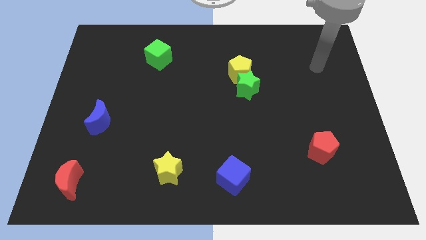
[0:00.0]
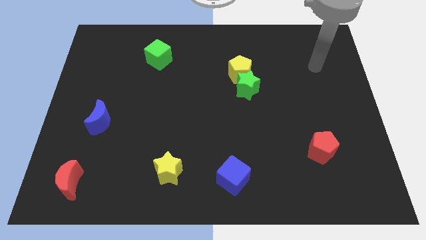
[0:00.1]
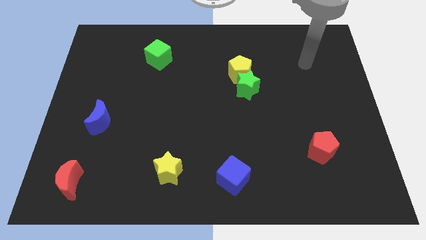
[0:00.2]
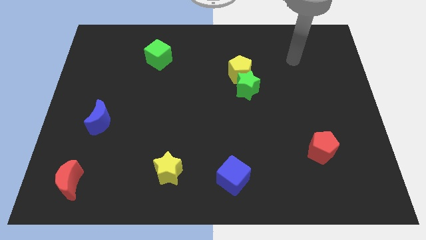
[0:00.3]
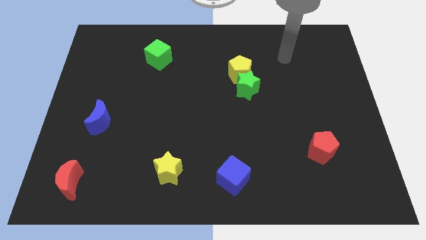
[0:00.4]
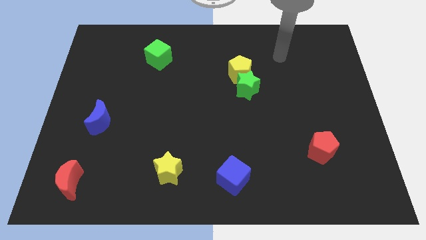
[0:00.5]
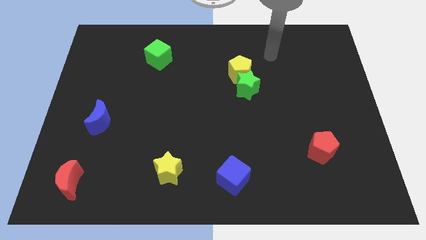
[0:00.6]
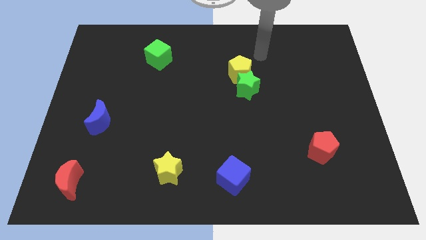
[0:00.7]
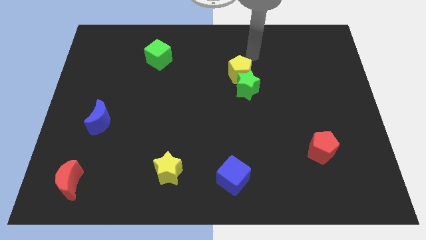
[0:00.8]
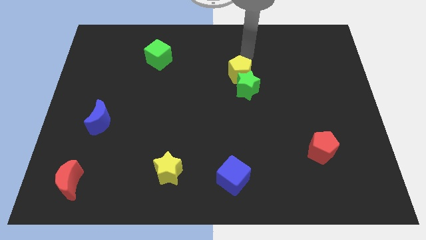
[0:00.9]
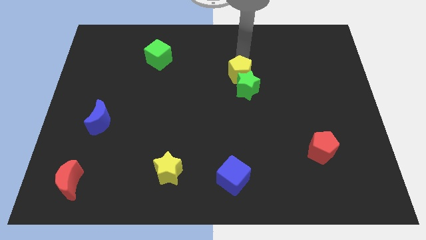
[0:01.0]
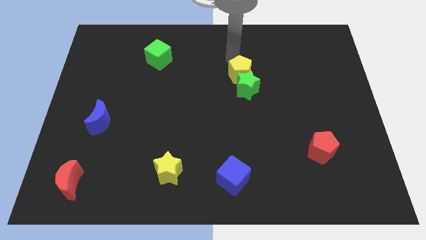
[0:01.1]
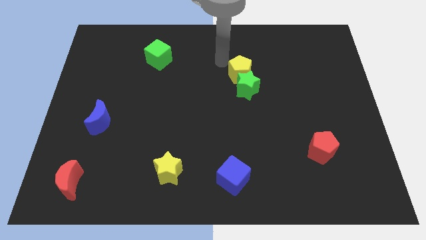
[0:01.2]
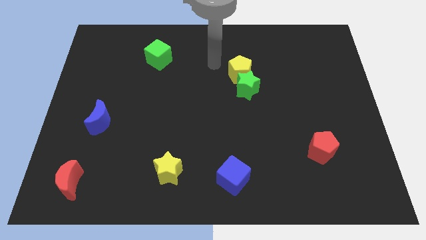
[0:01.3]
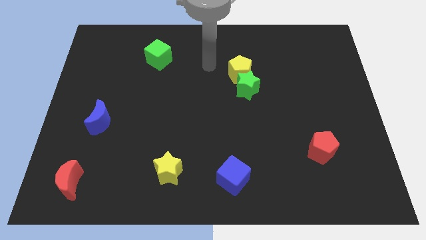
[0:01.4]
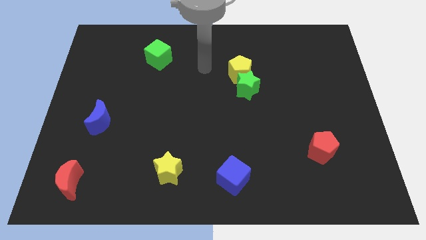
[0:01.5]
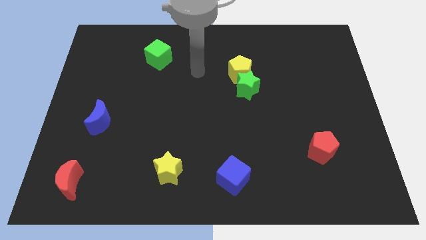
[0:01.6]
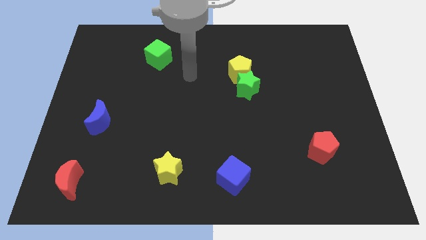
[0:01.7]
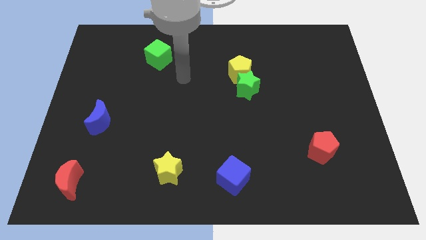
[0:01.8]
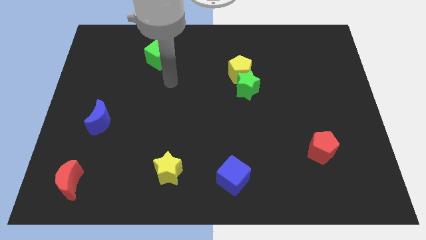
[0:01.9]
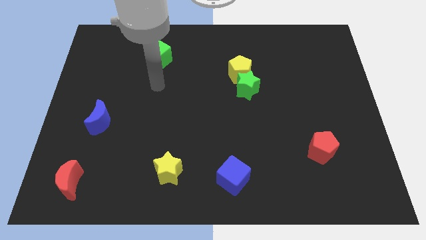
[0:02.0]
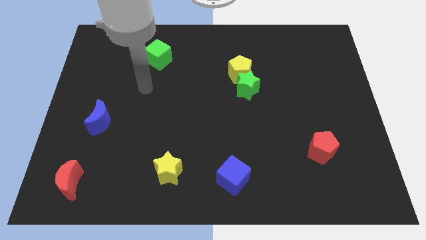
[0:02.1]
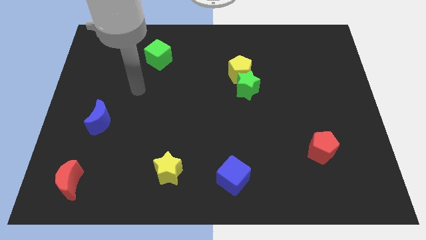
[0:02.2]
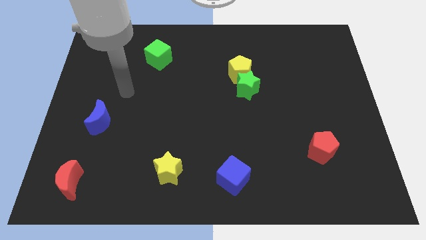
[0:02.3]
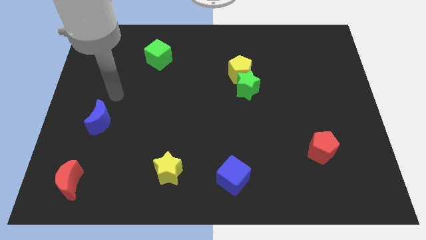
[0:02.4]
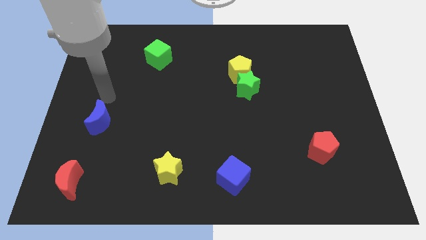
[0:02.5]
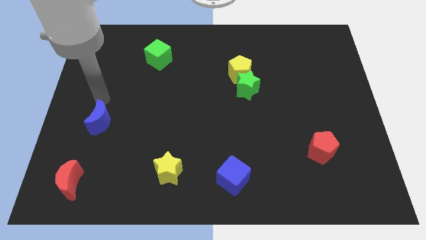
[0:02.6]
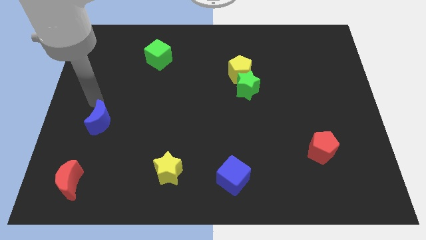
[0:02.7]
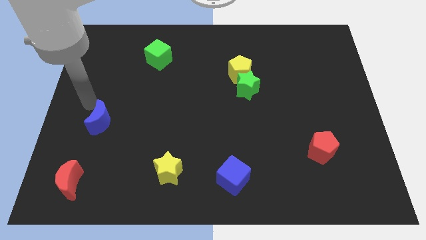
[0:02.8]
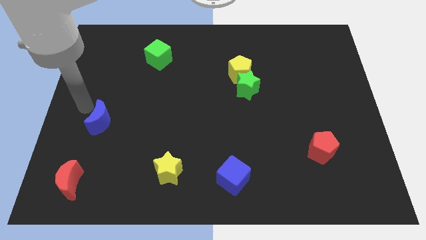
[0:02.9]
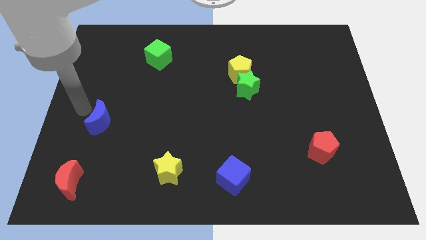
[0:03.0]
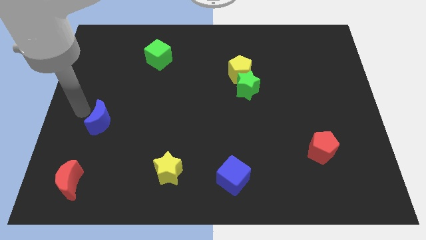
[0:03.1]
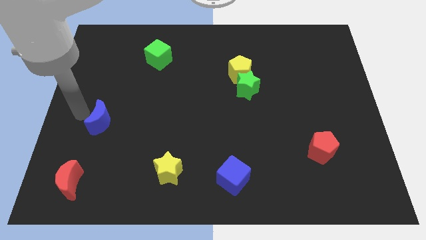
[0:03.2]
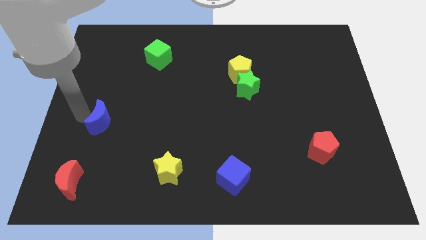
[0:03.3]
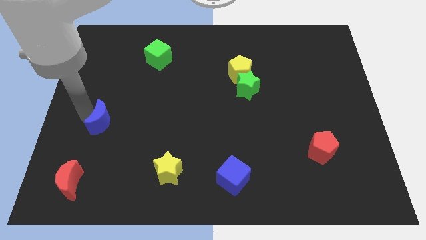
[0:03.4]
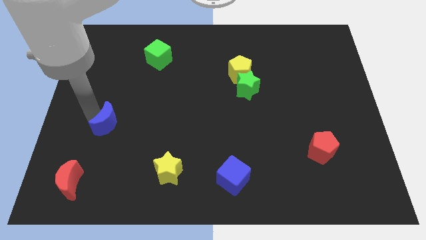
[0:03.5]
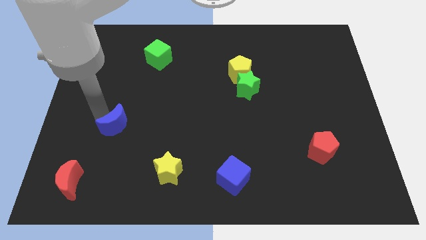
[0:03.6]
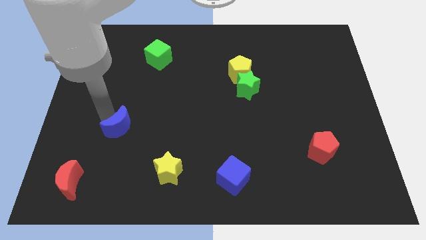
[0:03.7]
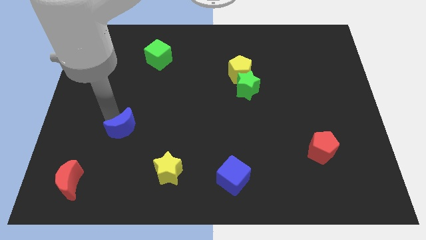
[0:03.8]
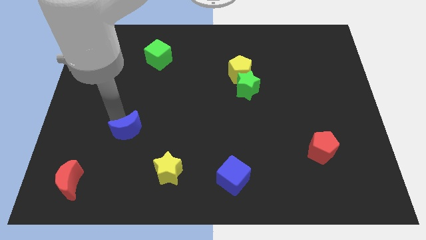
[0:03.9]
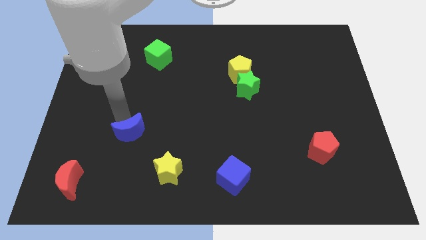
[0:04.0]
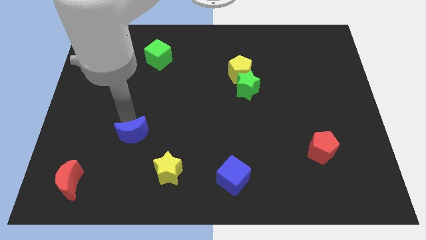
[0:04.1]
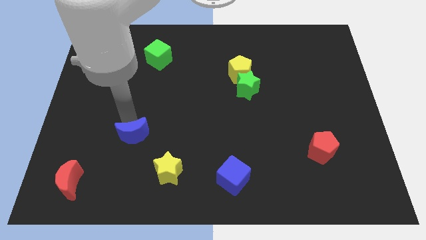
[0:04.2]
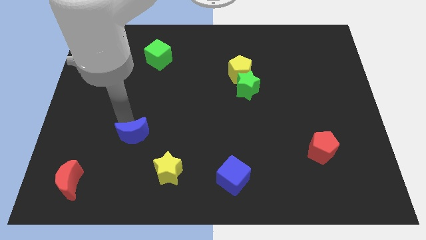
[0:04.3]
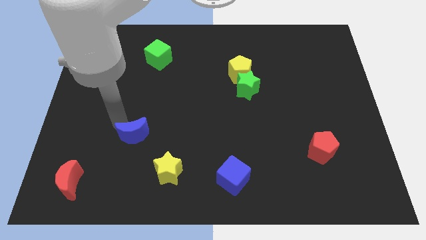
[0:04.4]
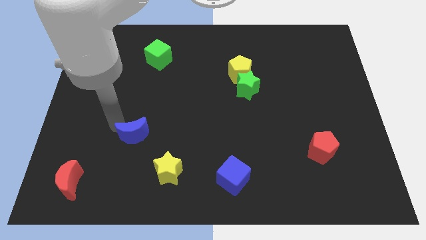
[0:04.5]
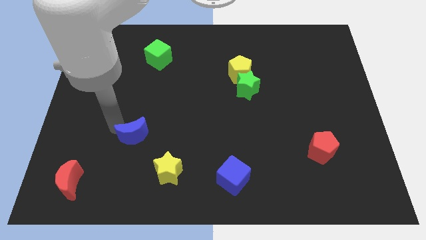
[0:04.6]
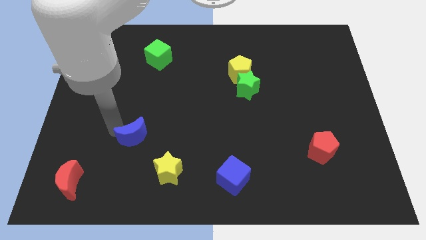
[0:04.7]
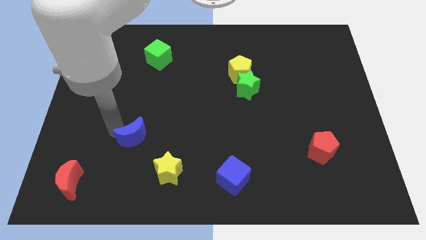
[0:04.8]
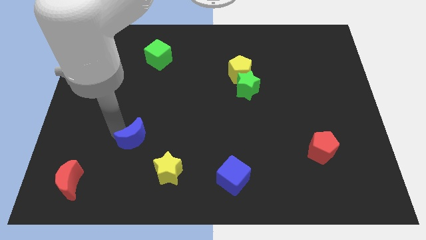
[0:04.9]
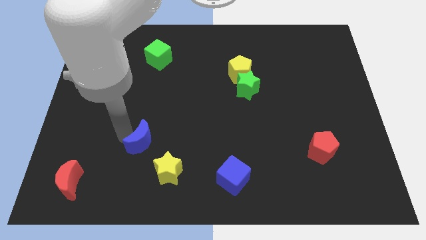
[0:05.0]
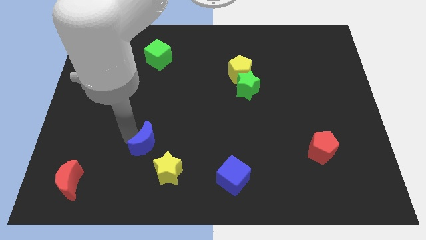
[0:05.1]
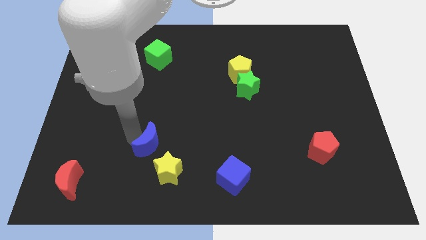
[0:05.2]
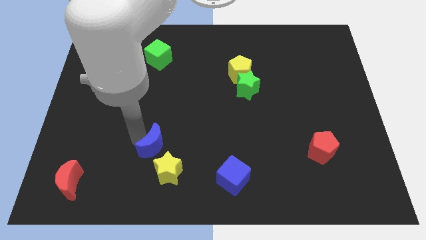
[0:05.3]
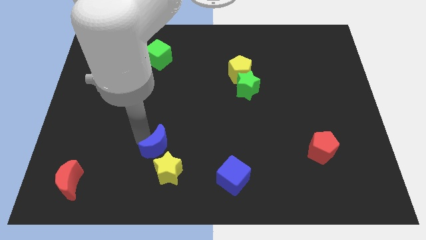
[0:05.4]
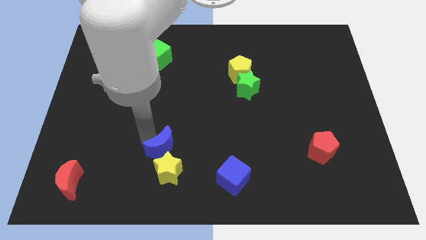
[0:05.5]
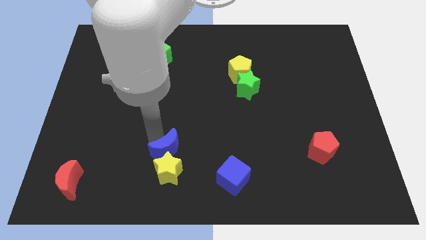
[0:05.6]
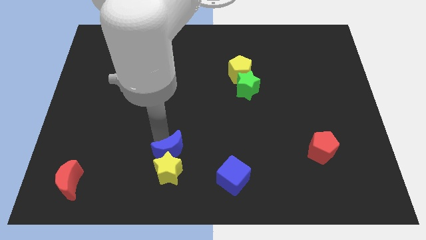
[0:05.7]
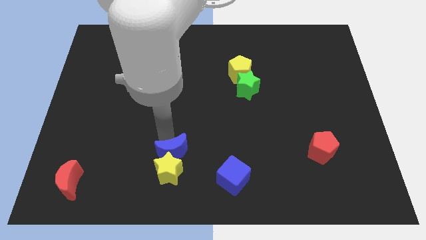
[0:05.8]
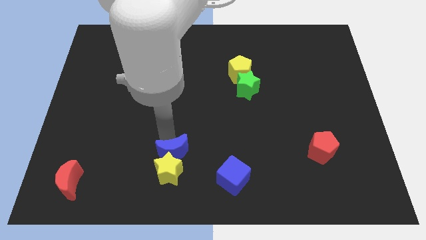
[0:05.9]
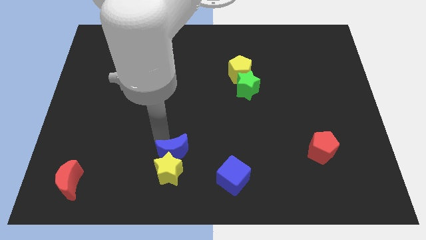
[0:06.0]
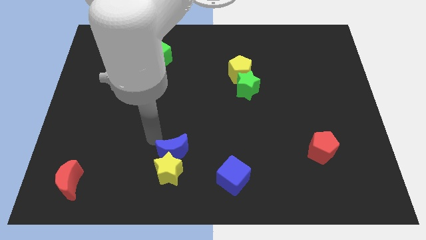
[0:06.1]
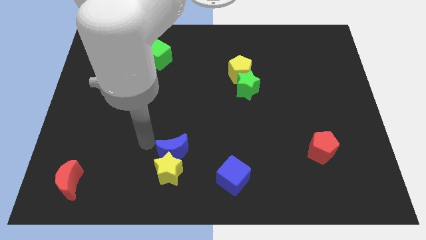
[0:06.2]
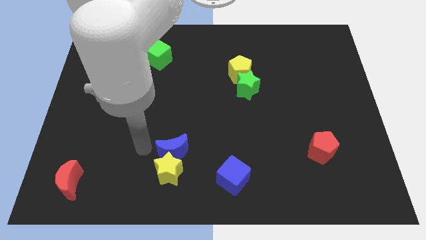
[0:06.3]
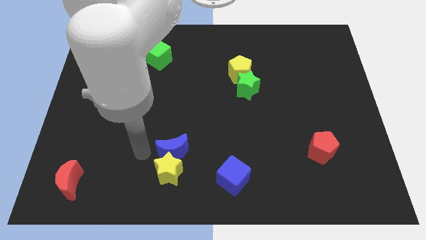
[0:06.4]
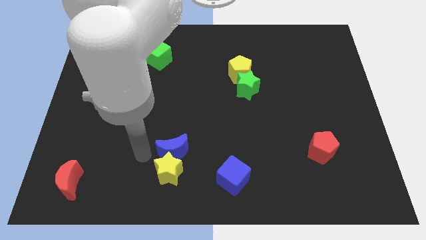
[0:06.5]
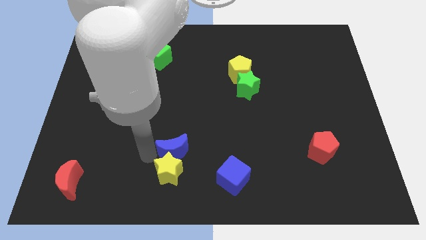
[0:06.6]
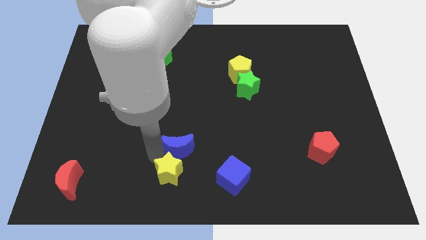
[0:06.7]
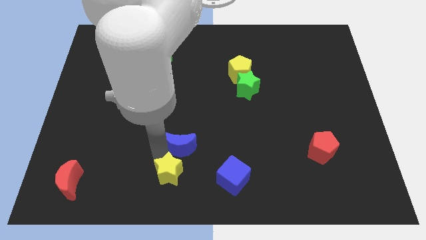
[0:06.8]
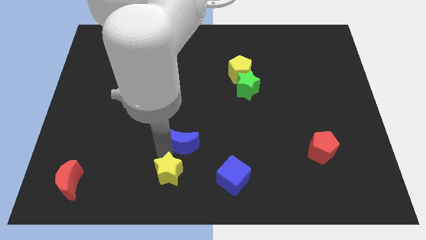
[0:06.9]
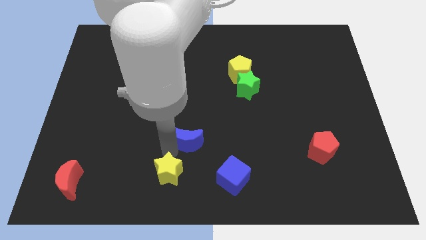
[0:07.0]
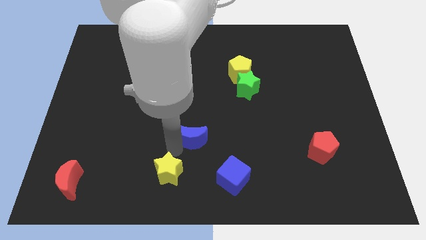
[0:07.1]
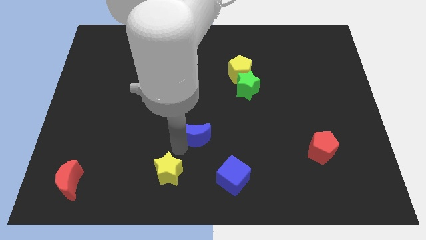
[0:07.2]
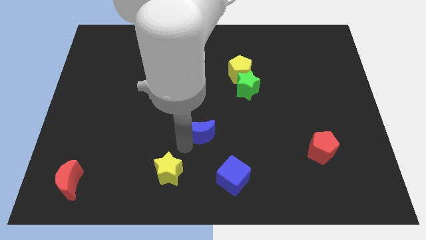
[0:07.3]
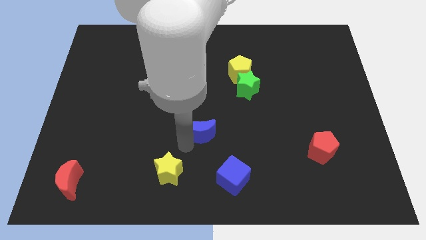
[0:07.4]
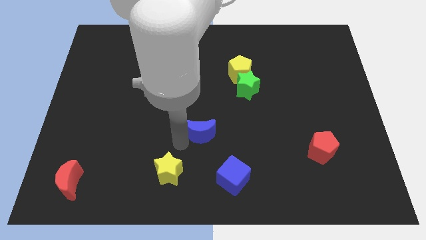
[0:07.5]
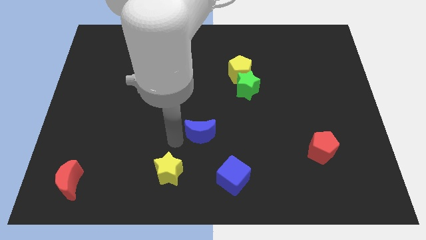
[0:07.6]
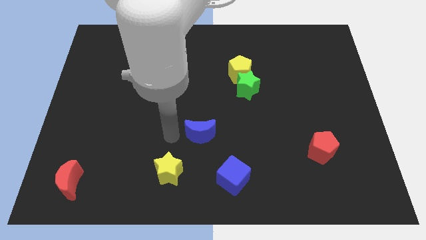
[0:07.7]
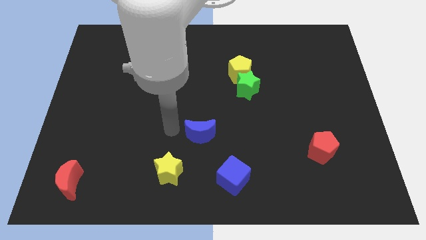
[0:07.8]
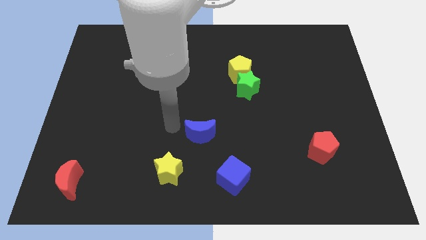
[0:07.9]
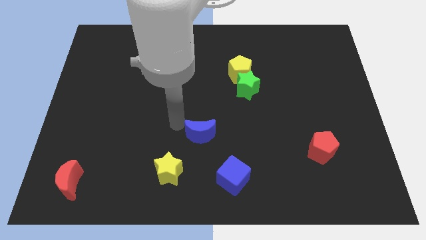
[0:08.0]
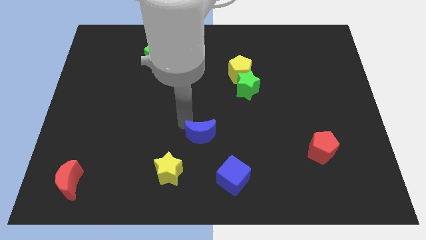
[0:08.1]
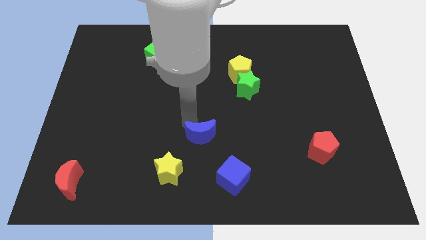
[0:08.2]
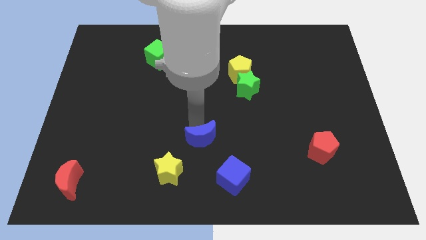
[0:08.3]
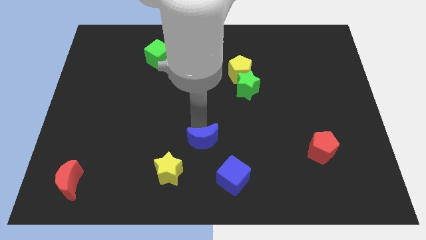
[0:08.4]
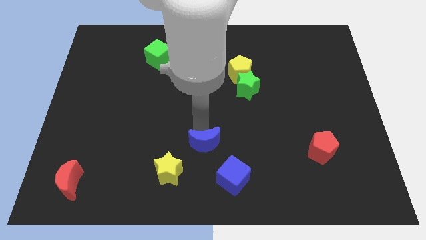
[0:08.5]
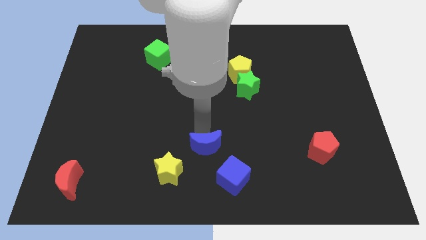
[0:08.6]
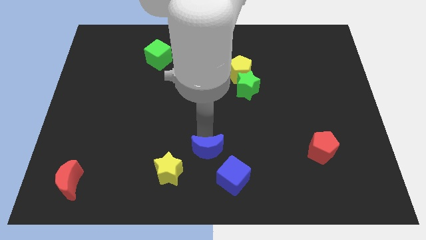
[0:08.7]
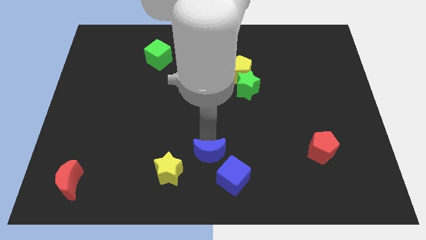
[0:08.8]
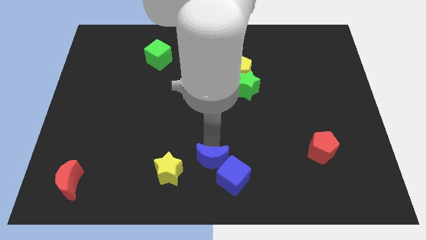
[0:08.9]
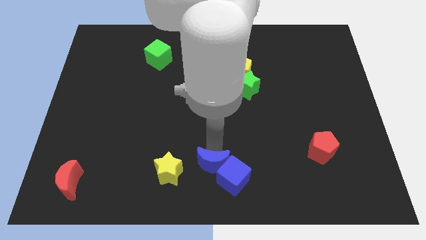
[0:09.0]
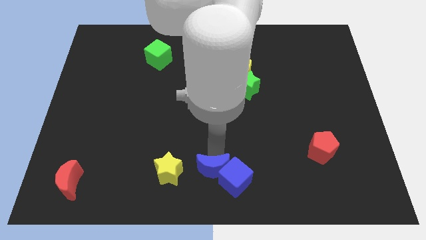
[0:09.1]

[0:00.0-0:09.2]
put the blue moon next to the blue cube
